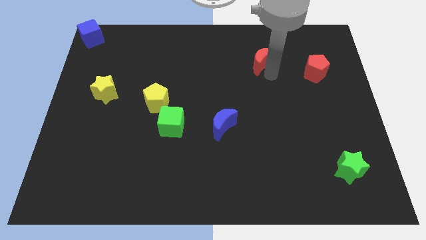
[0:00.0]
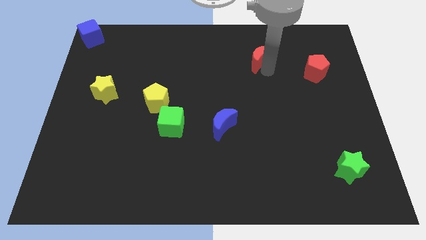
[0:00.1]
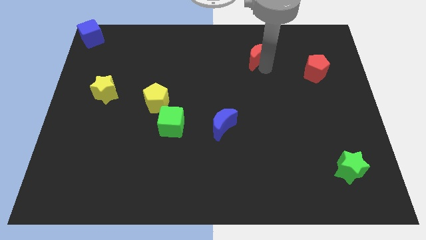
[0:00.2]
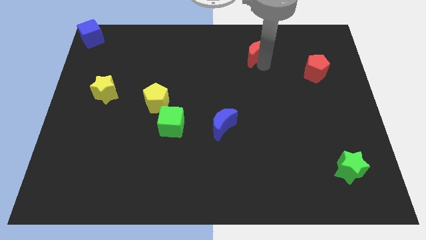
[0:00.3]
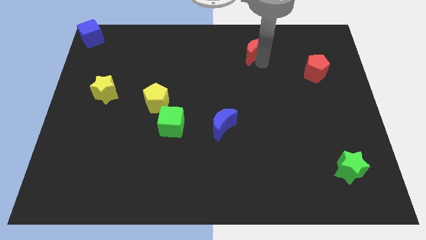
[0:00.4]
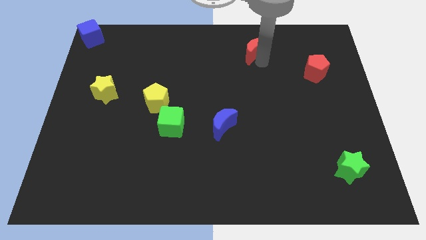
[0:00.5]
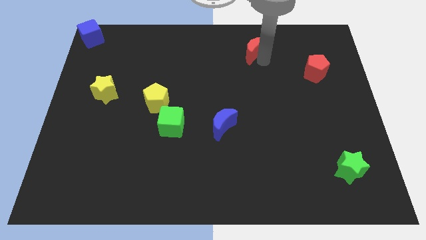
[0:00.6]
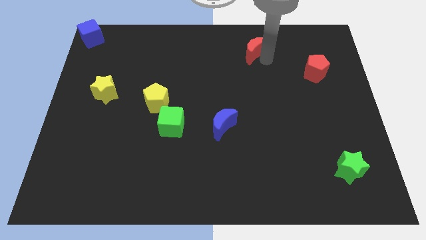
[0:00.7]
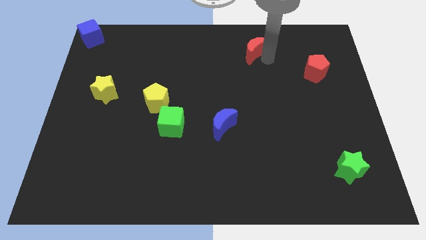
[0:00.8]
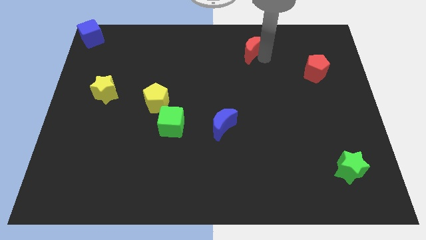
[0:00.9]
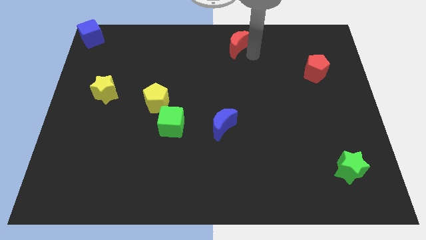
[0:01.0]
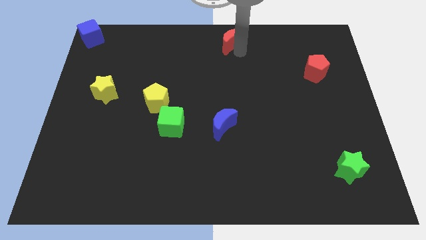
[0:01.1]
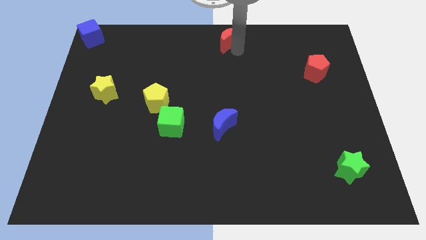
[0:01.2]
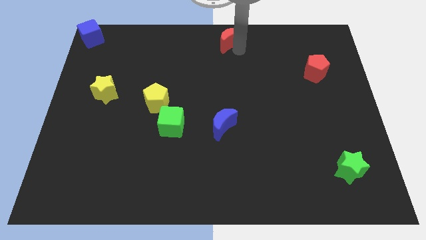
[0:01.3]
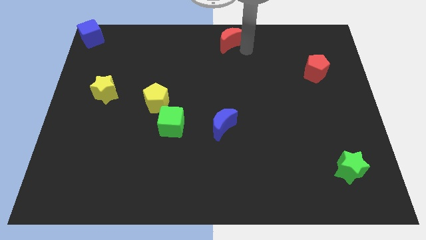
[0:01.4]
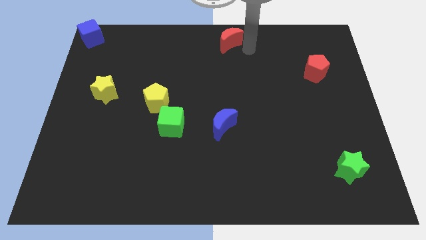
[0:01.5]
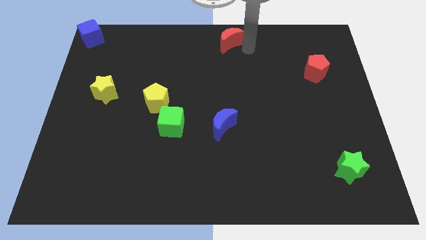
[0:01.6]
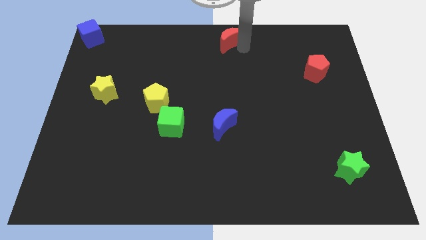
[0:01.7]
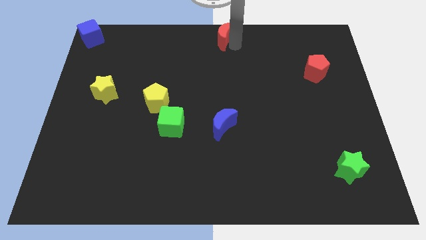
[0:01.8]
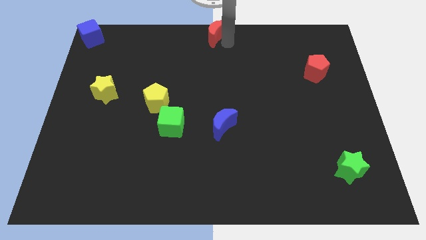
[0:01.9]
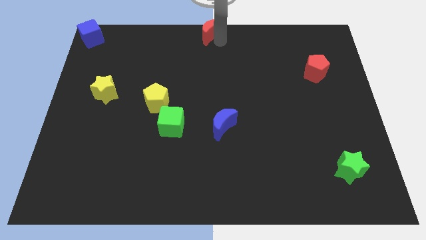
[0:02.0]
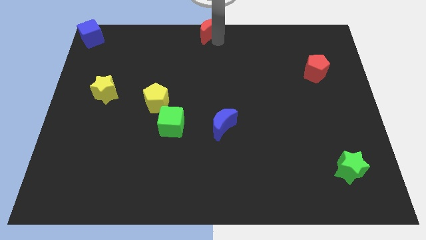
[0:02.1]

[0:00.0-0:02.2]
push the red crescent to the top centre of the board

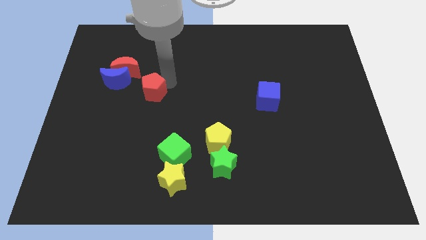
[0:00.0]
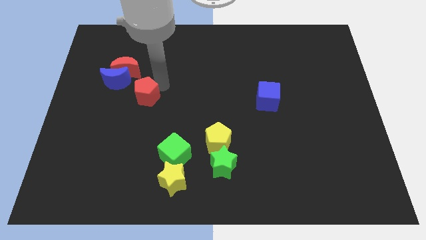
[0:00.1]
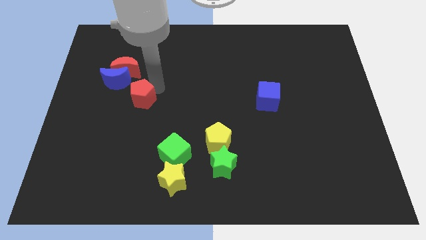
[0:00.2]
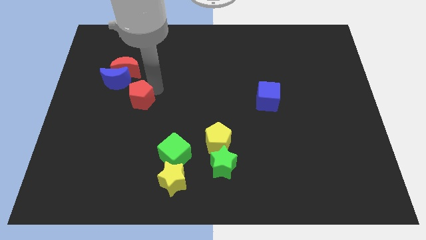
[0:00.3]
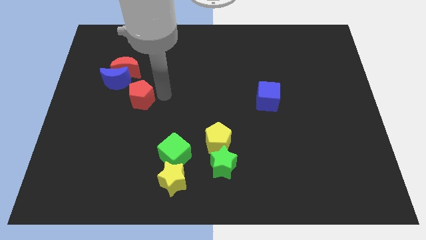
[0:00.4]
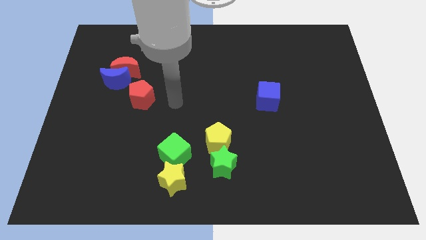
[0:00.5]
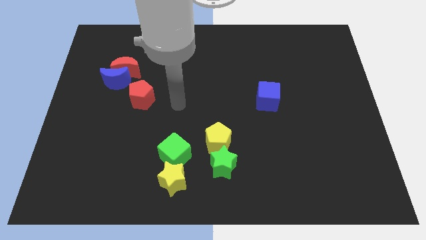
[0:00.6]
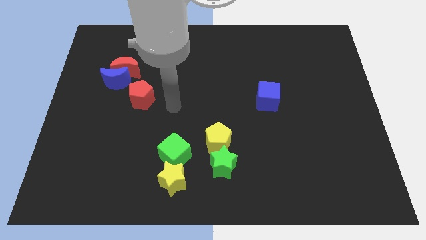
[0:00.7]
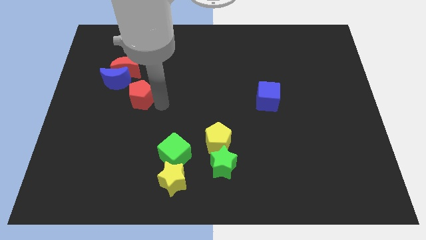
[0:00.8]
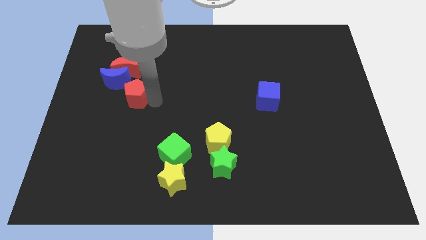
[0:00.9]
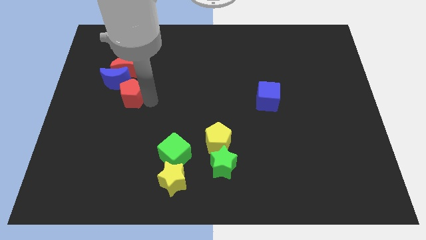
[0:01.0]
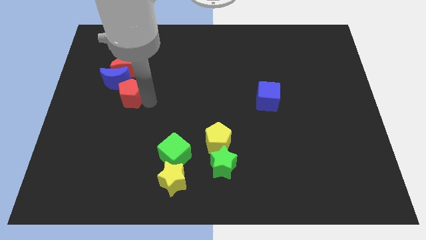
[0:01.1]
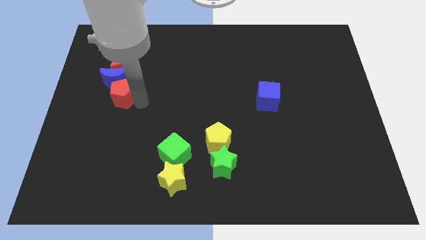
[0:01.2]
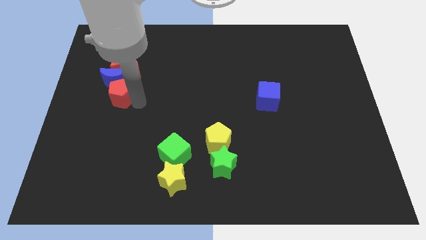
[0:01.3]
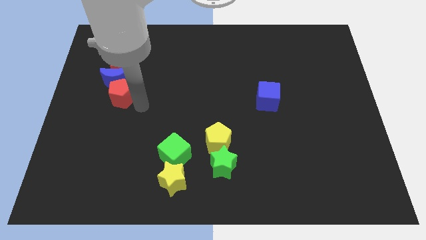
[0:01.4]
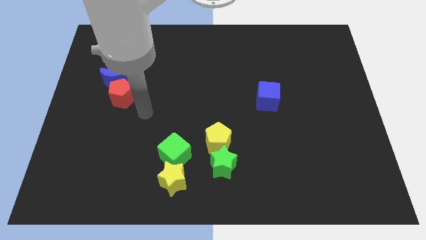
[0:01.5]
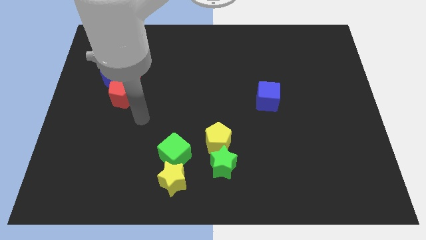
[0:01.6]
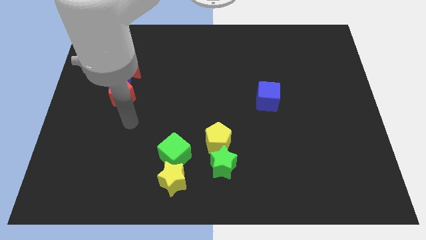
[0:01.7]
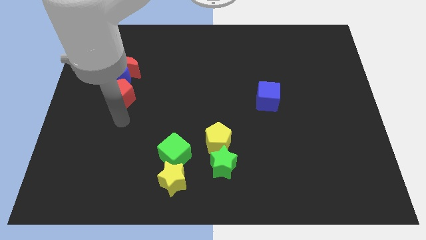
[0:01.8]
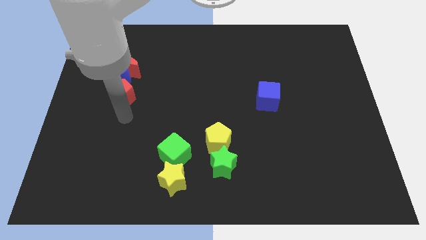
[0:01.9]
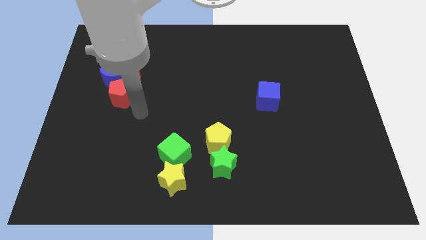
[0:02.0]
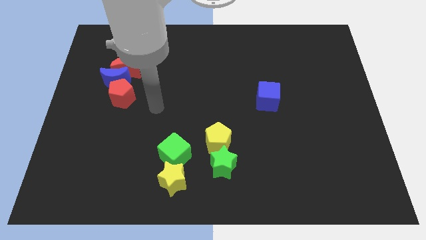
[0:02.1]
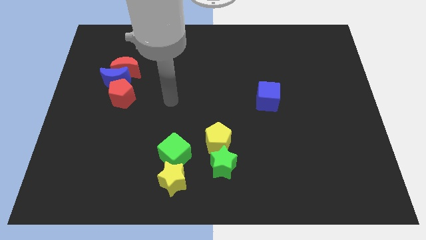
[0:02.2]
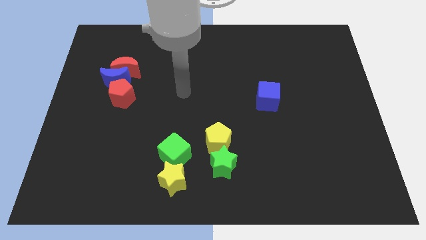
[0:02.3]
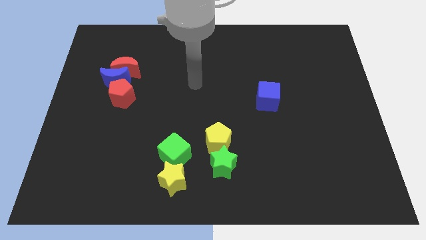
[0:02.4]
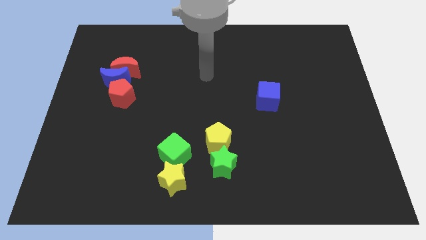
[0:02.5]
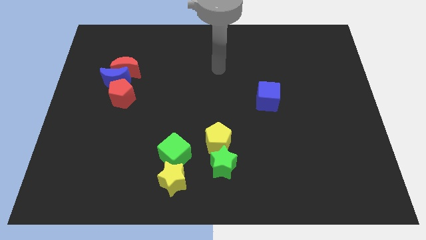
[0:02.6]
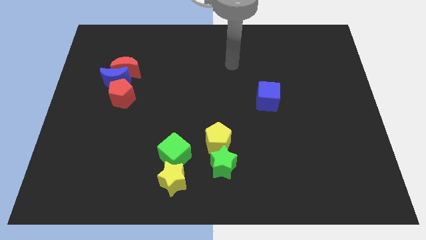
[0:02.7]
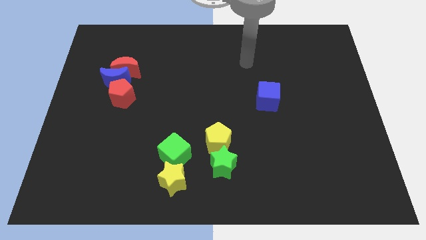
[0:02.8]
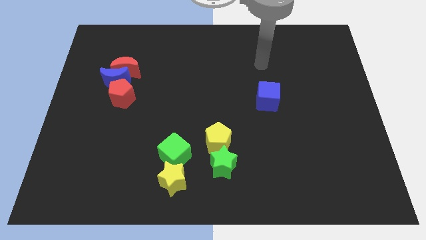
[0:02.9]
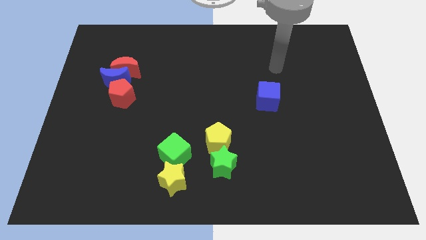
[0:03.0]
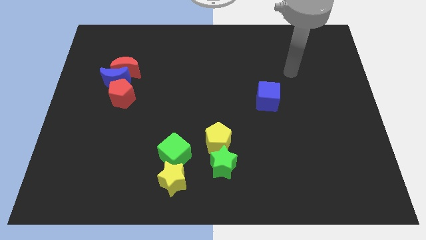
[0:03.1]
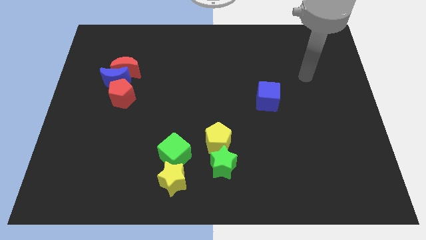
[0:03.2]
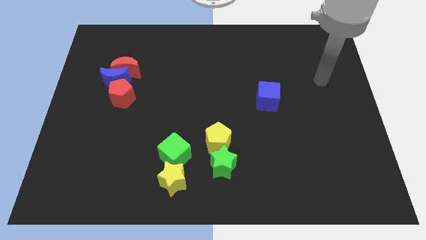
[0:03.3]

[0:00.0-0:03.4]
place the red pentagon at the bottom of the blue crescent

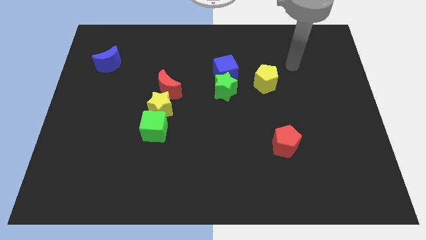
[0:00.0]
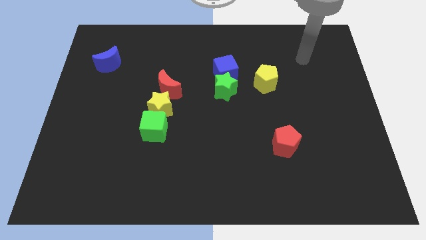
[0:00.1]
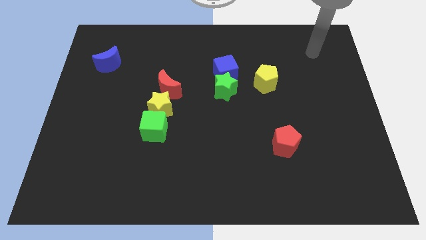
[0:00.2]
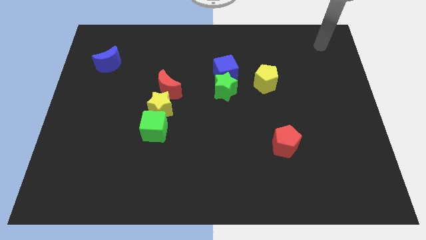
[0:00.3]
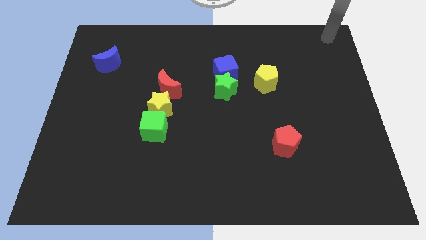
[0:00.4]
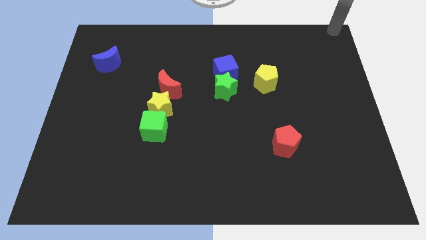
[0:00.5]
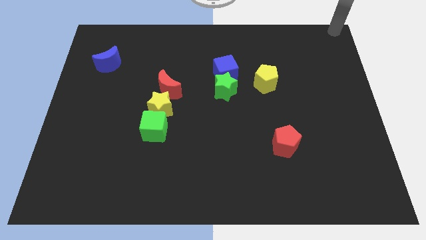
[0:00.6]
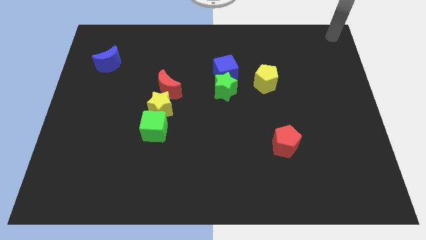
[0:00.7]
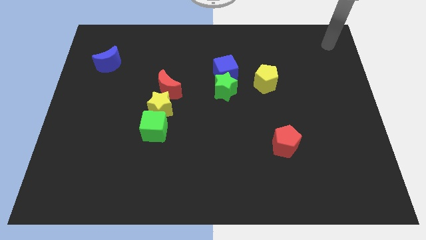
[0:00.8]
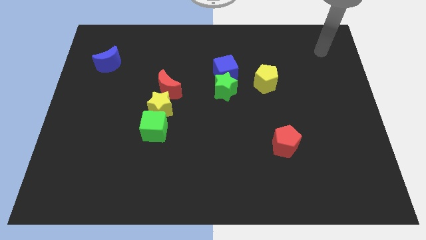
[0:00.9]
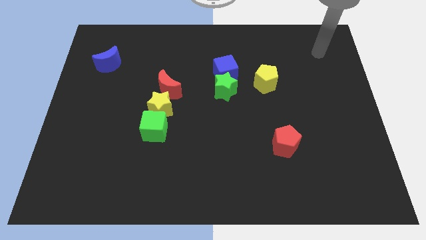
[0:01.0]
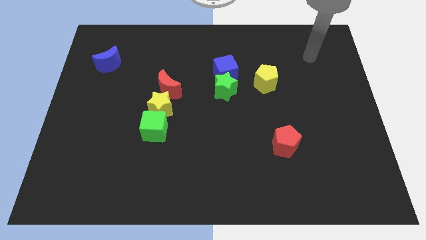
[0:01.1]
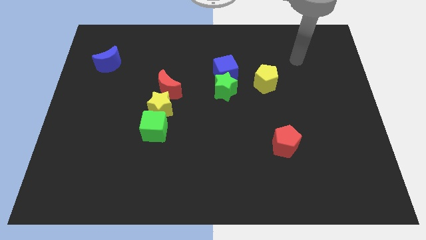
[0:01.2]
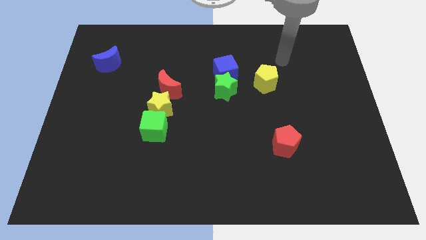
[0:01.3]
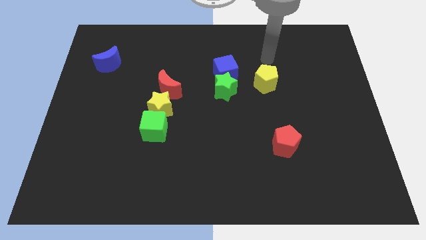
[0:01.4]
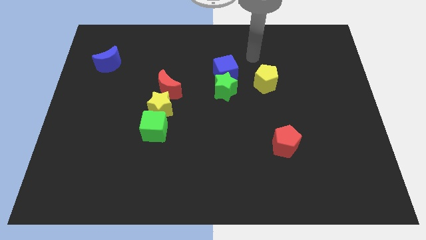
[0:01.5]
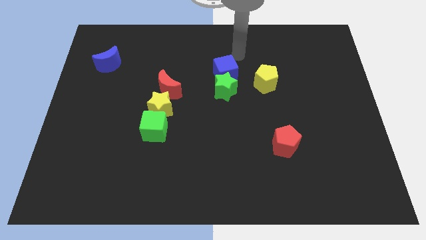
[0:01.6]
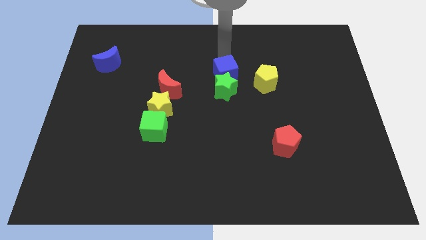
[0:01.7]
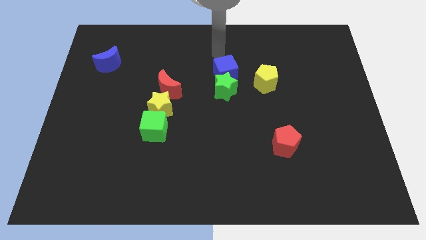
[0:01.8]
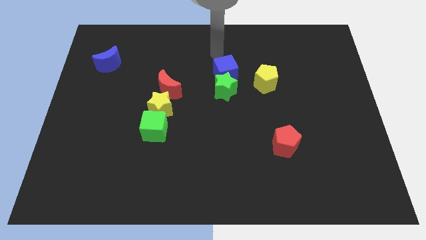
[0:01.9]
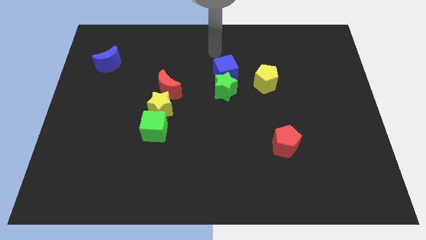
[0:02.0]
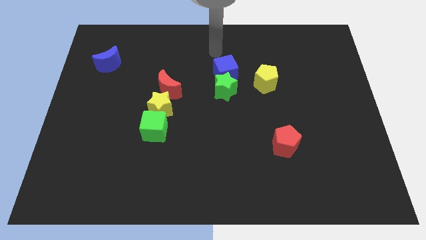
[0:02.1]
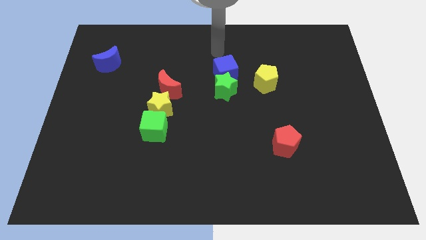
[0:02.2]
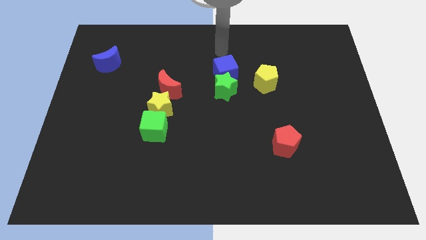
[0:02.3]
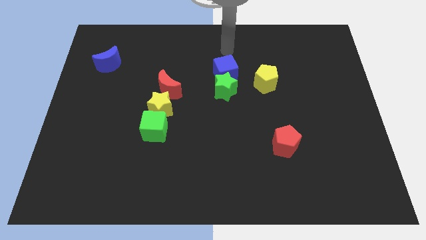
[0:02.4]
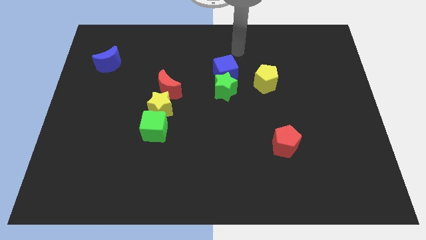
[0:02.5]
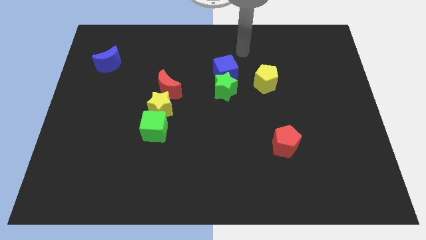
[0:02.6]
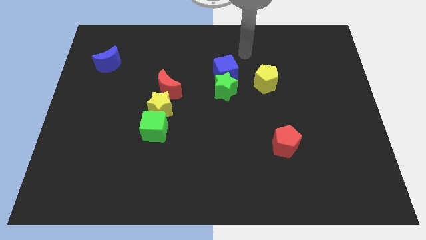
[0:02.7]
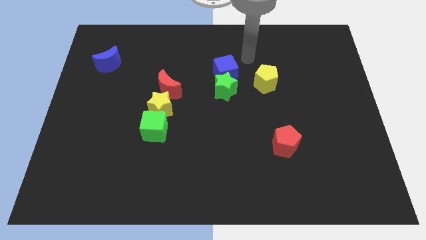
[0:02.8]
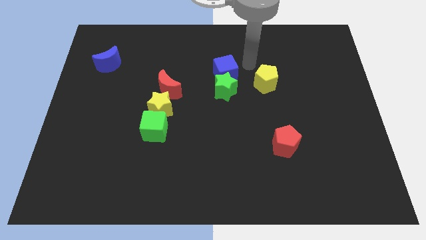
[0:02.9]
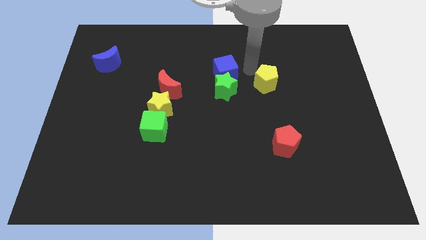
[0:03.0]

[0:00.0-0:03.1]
point your arm at the right of the blue cube

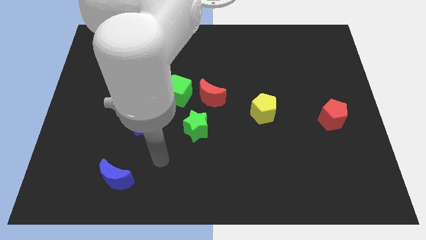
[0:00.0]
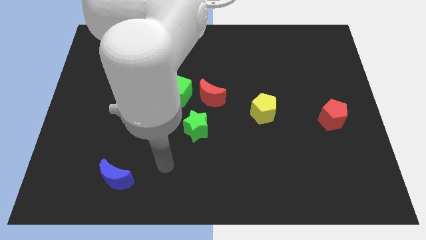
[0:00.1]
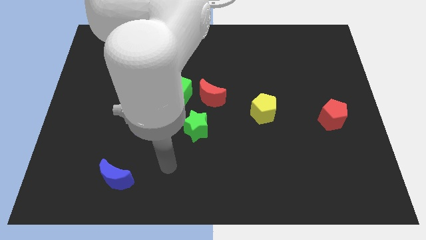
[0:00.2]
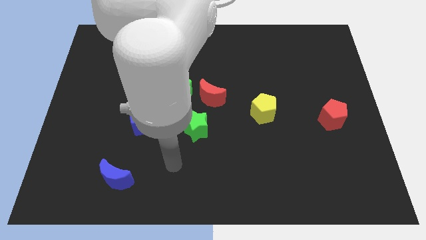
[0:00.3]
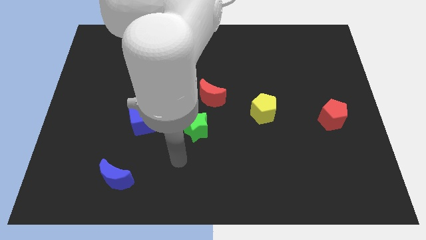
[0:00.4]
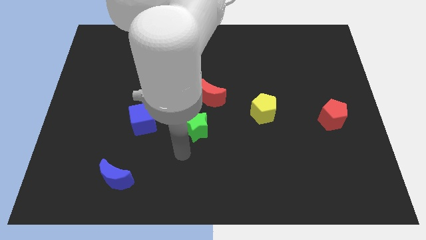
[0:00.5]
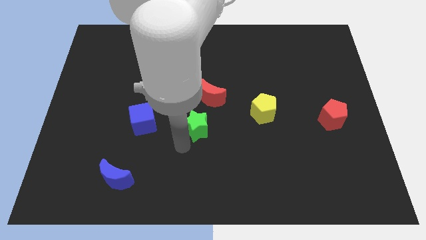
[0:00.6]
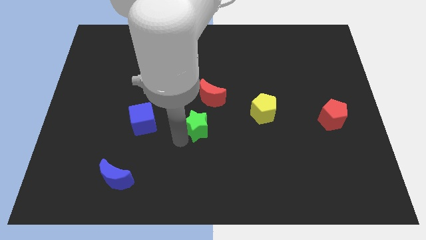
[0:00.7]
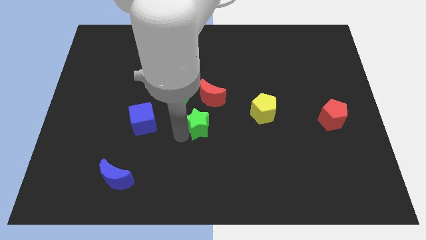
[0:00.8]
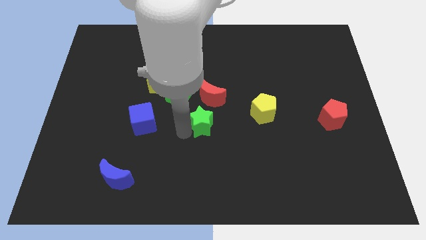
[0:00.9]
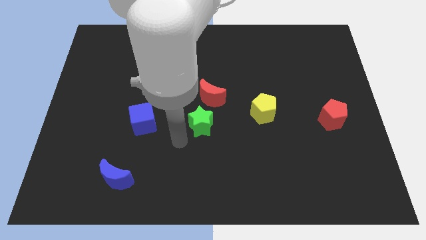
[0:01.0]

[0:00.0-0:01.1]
push the green star slightly towards the red crescent
